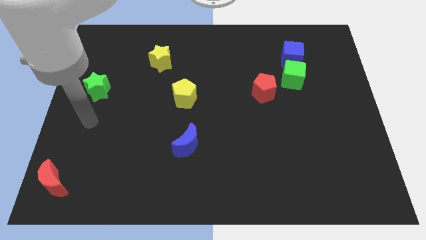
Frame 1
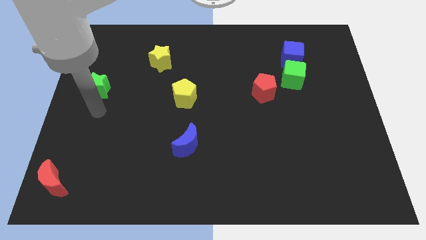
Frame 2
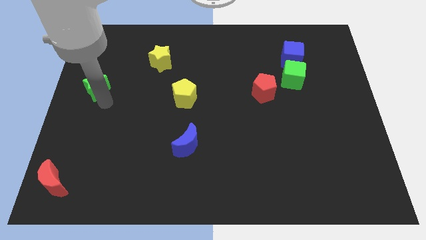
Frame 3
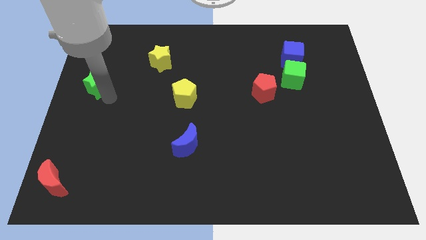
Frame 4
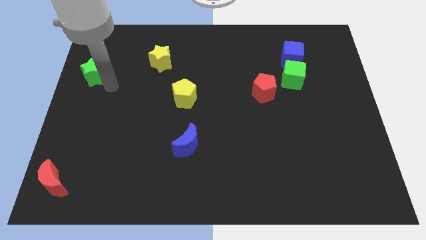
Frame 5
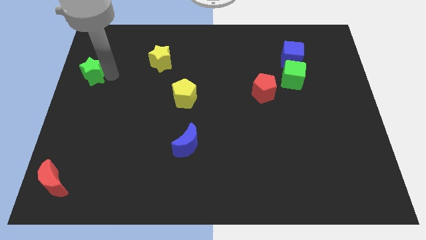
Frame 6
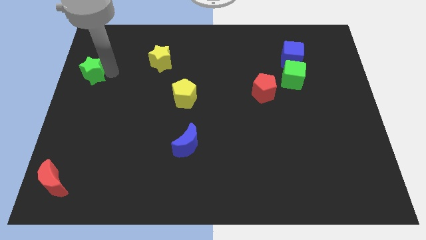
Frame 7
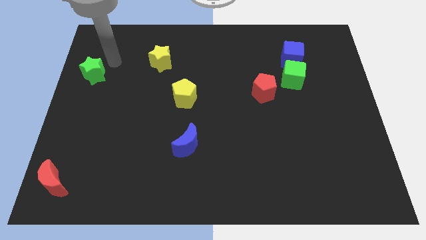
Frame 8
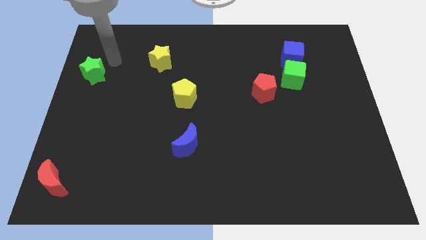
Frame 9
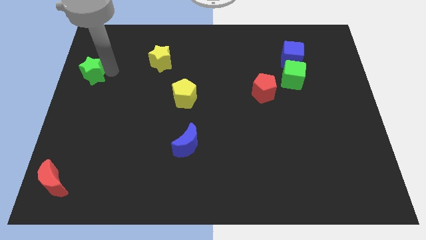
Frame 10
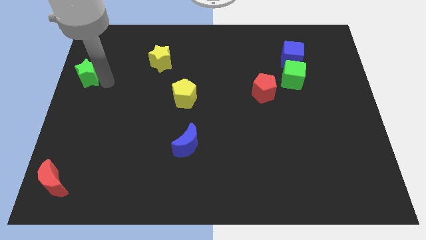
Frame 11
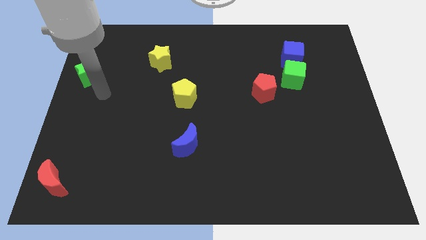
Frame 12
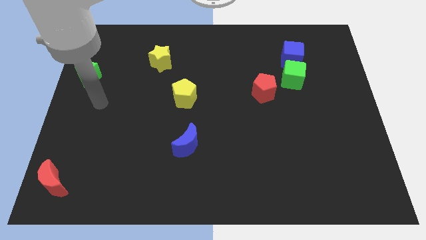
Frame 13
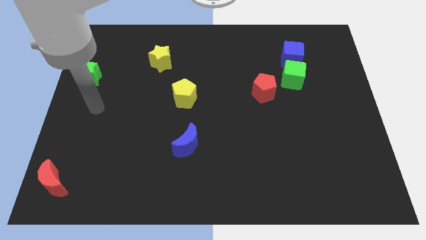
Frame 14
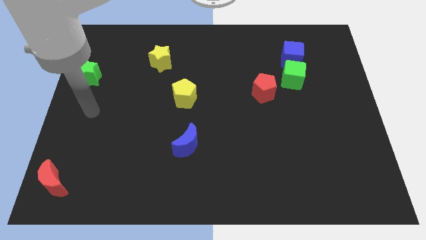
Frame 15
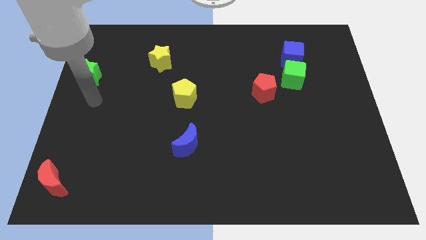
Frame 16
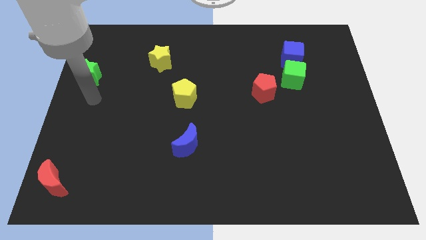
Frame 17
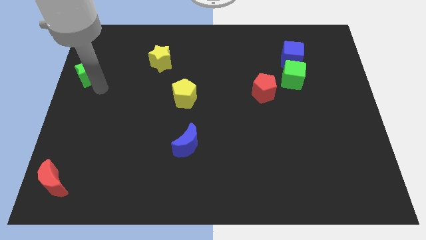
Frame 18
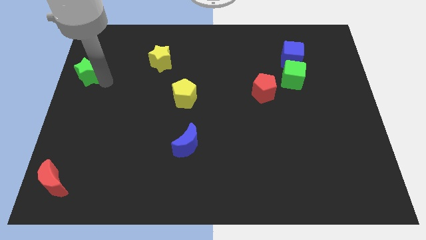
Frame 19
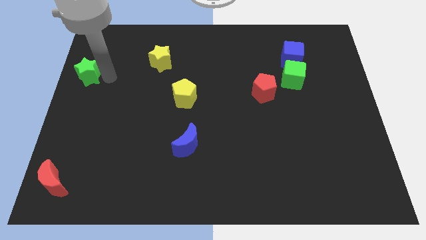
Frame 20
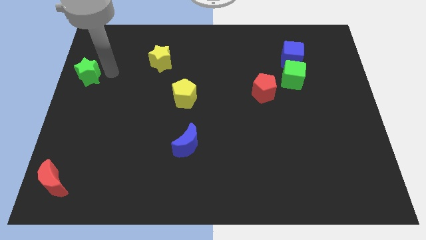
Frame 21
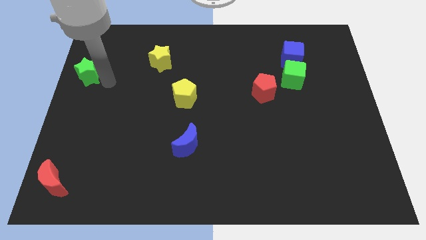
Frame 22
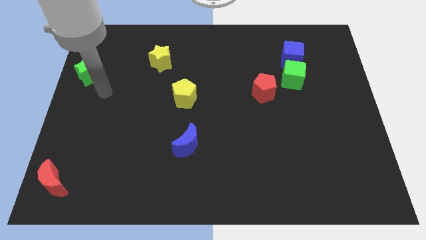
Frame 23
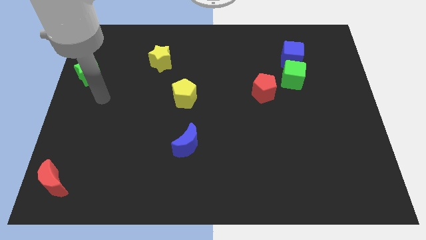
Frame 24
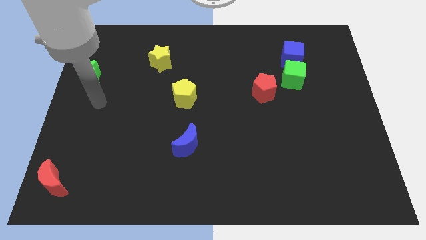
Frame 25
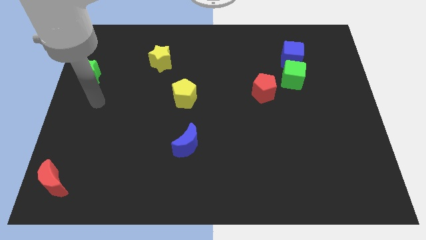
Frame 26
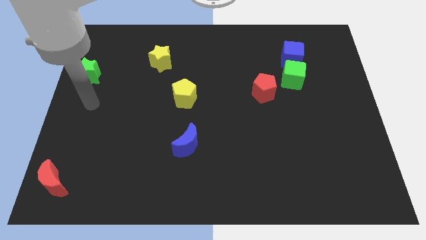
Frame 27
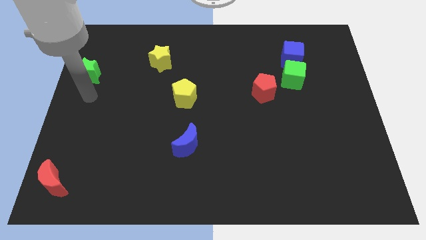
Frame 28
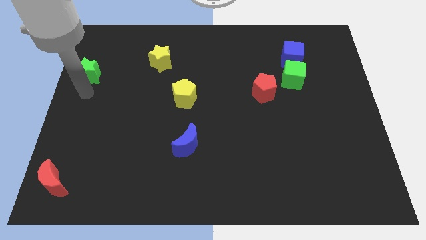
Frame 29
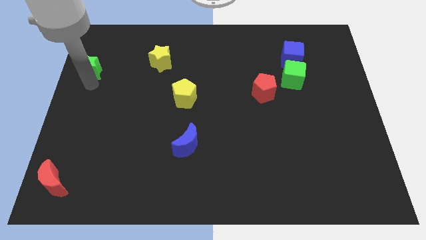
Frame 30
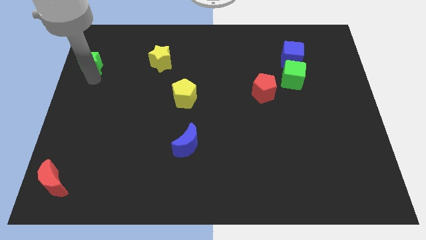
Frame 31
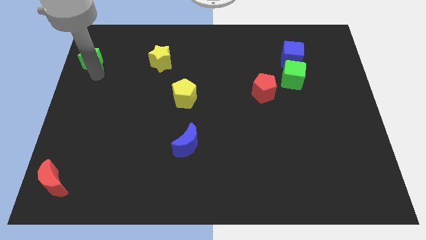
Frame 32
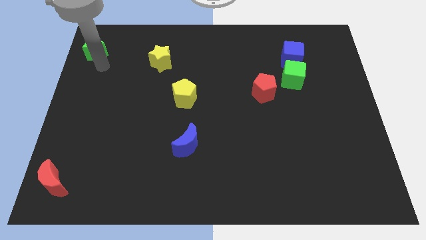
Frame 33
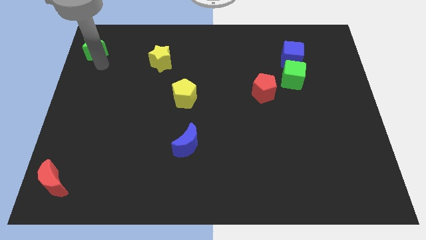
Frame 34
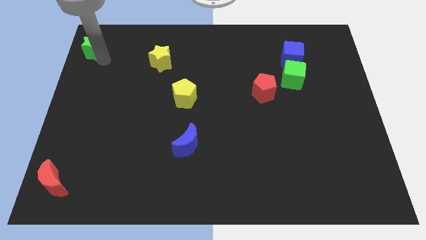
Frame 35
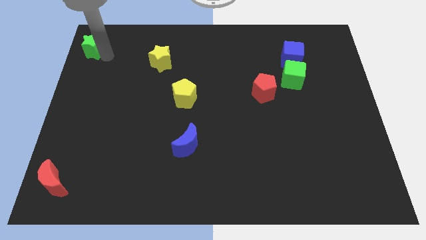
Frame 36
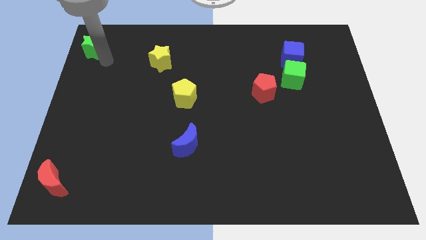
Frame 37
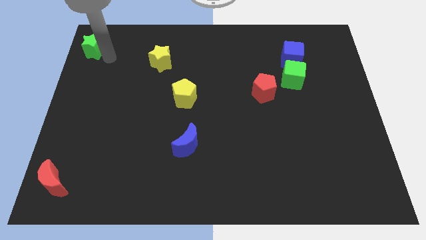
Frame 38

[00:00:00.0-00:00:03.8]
slide the green star diagonally top left to the yellow star

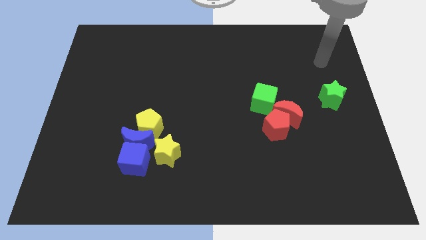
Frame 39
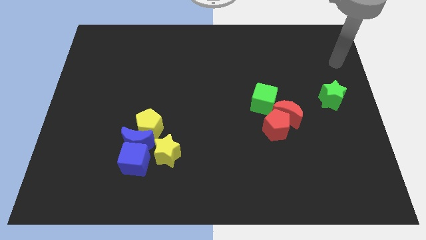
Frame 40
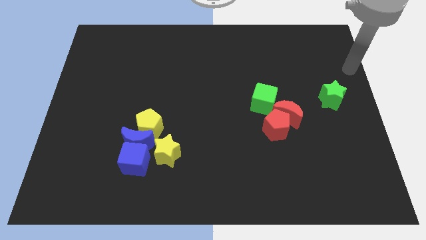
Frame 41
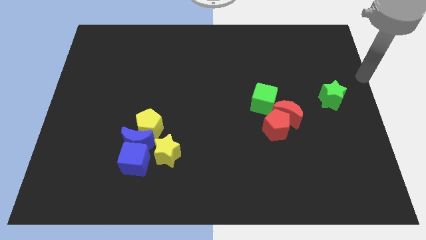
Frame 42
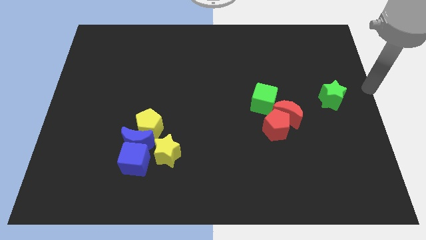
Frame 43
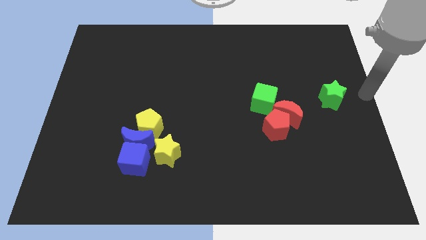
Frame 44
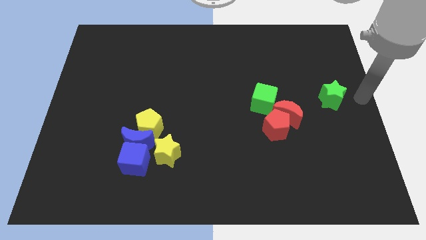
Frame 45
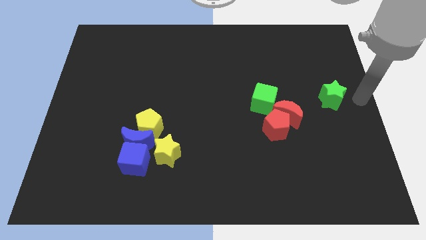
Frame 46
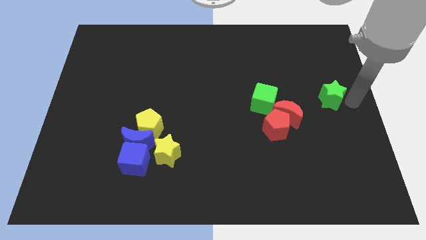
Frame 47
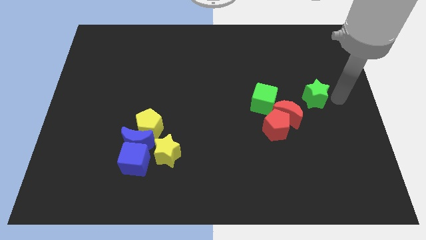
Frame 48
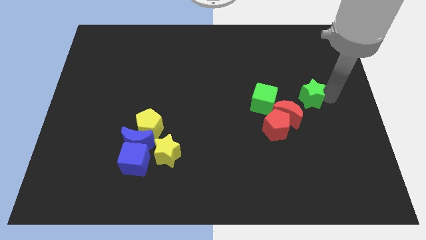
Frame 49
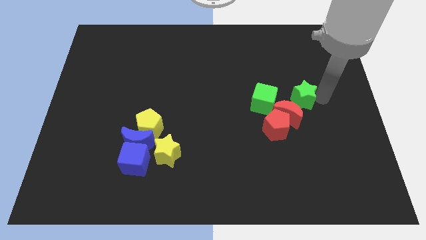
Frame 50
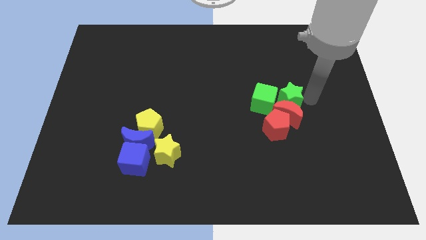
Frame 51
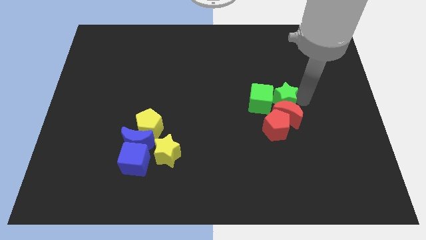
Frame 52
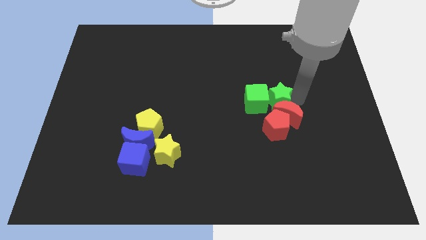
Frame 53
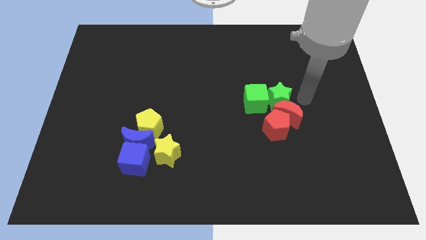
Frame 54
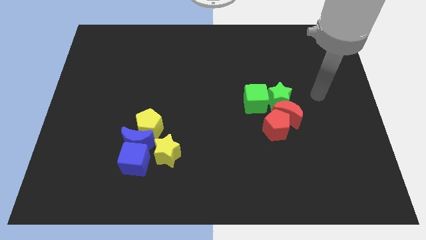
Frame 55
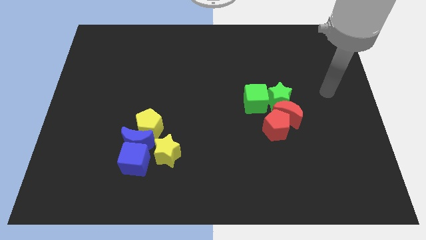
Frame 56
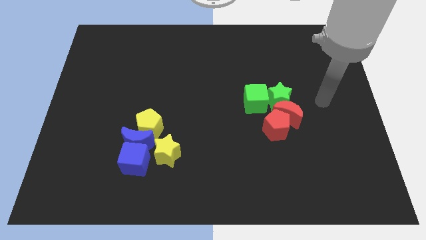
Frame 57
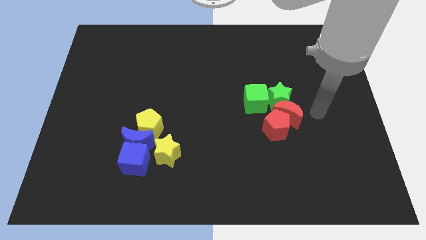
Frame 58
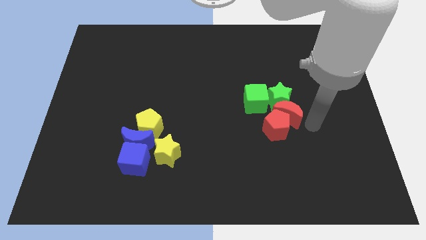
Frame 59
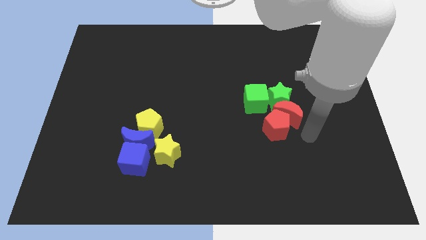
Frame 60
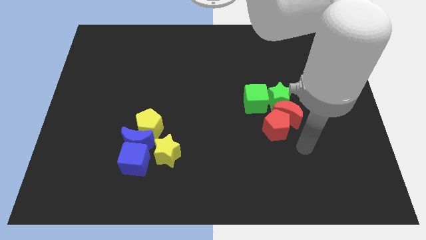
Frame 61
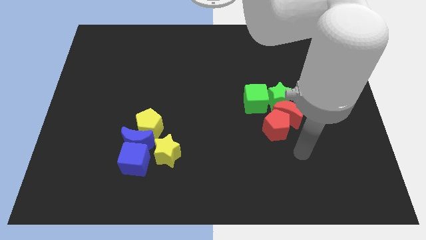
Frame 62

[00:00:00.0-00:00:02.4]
move the green star towards the green cube

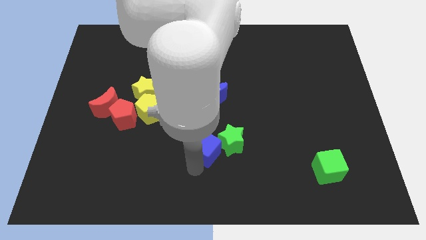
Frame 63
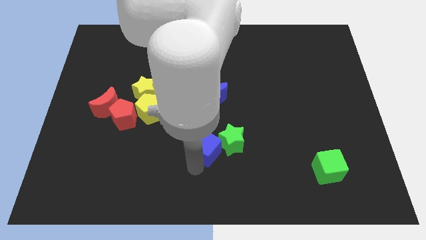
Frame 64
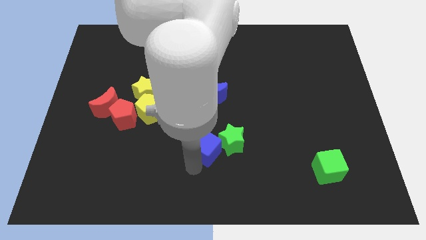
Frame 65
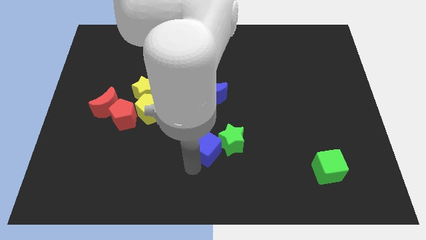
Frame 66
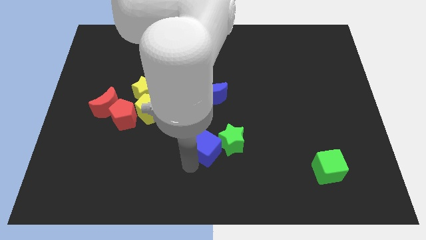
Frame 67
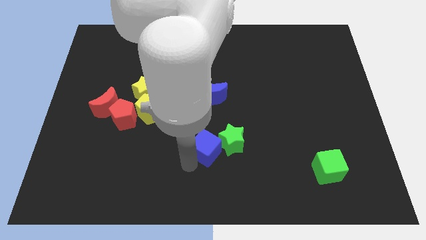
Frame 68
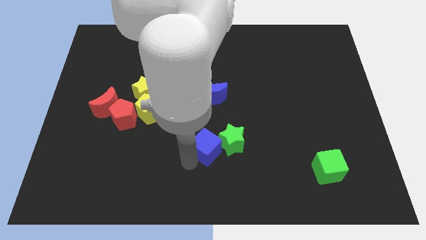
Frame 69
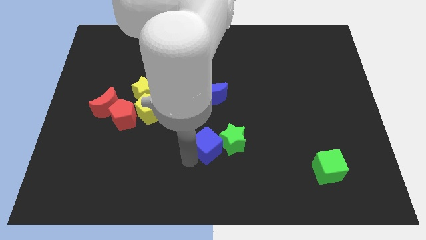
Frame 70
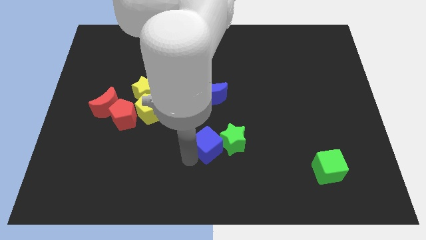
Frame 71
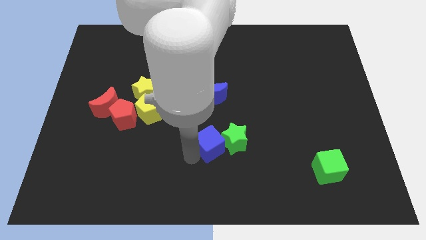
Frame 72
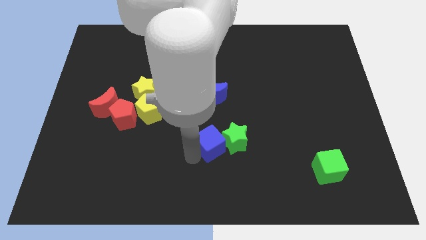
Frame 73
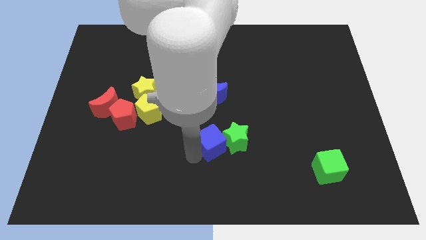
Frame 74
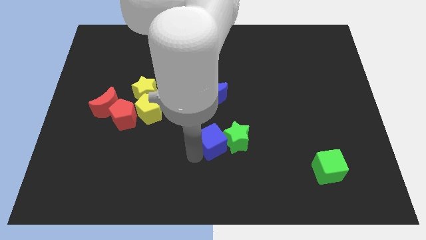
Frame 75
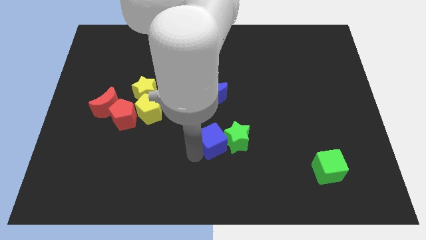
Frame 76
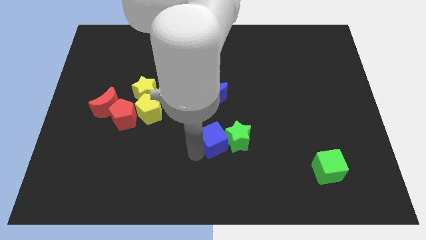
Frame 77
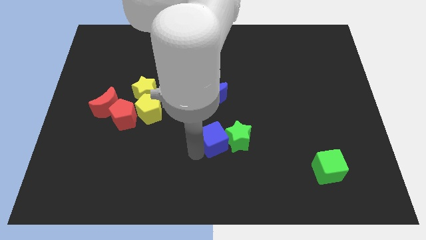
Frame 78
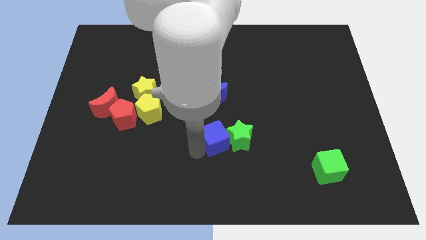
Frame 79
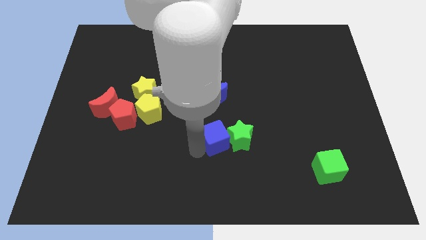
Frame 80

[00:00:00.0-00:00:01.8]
push the blue cube into the green star

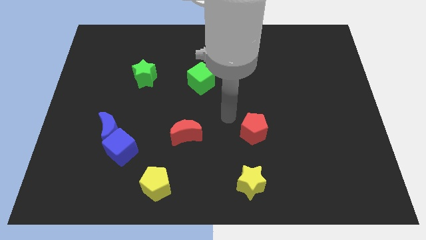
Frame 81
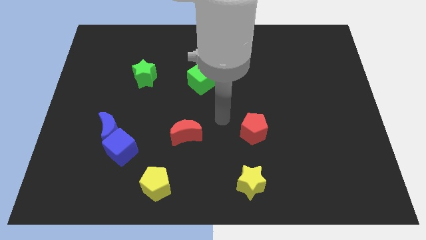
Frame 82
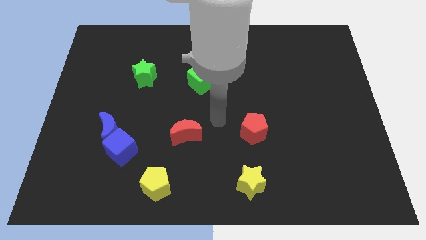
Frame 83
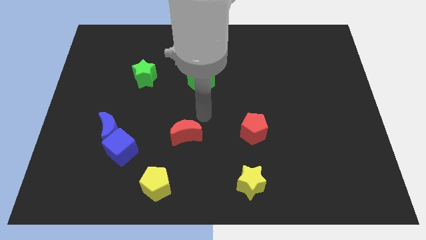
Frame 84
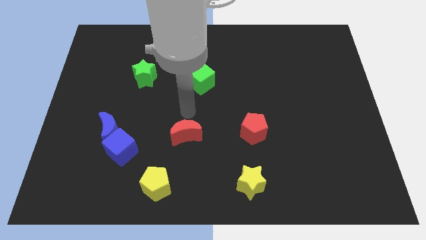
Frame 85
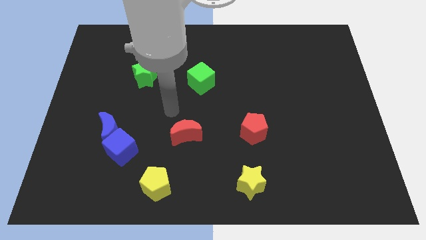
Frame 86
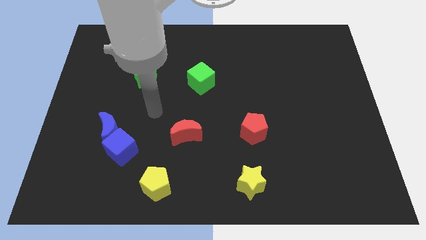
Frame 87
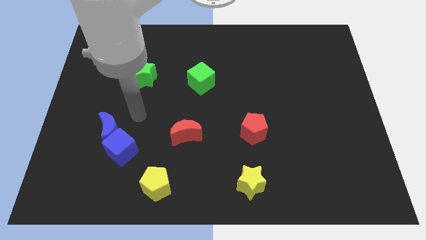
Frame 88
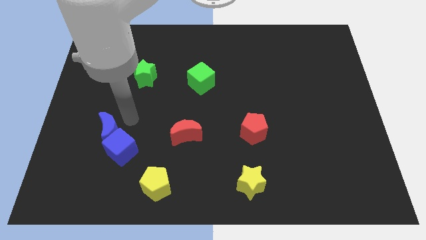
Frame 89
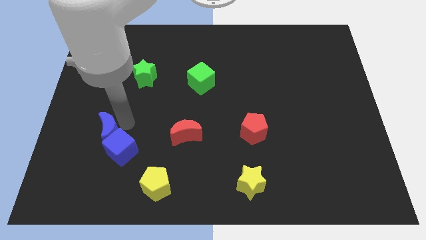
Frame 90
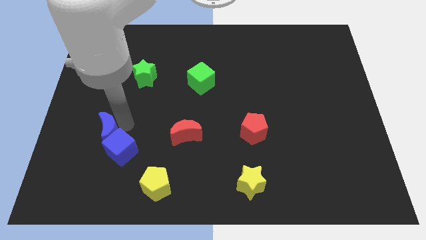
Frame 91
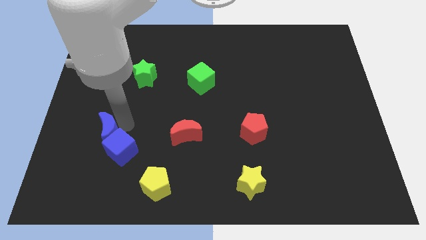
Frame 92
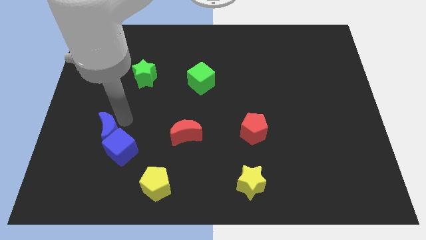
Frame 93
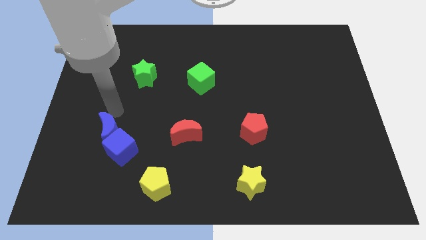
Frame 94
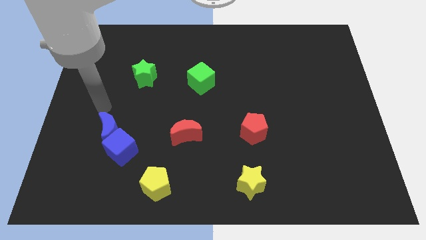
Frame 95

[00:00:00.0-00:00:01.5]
point your arm on the top of the blue moon
